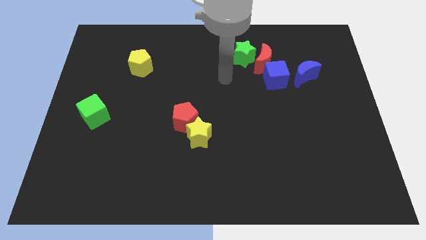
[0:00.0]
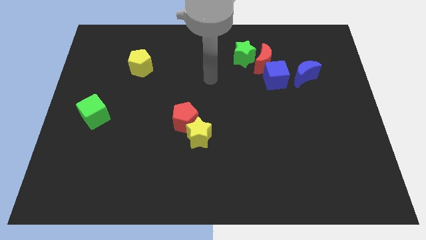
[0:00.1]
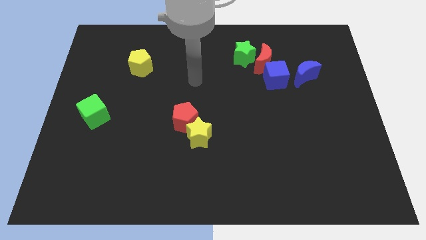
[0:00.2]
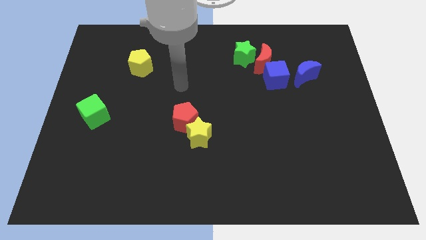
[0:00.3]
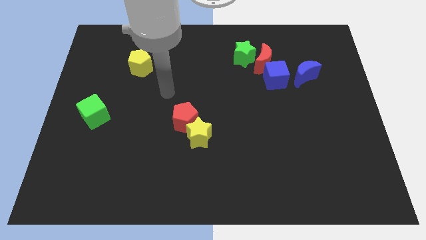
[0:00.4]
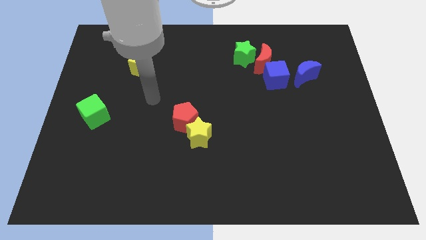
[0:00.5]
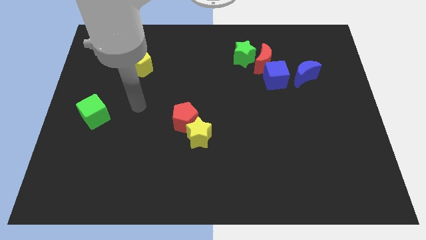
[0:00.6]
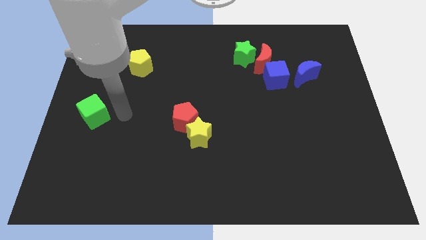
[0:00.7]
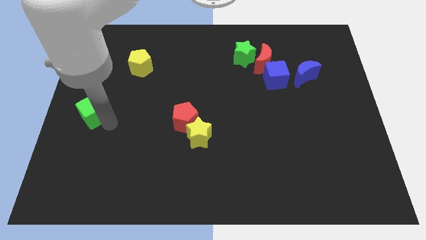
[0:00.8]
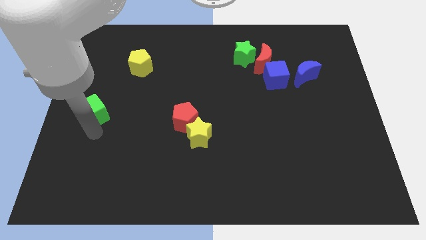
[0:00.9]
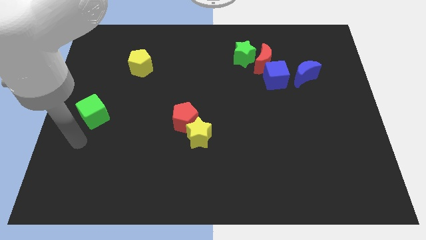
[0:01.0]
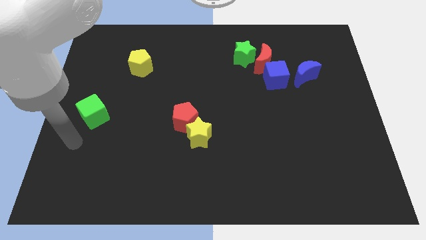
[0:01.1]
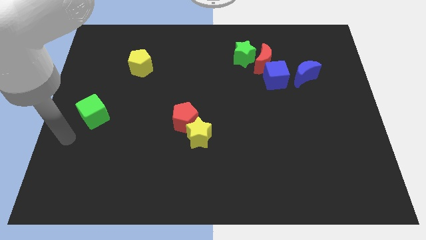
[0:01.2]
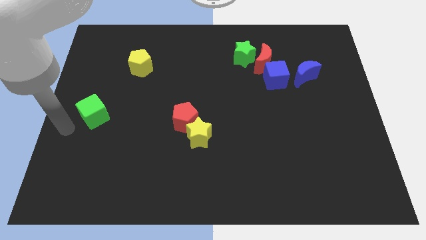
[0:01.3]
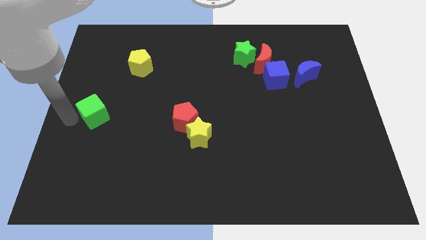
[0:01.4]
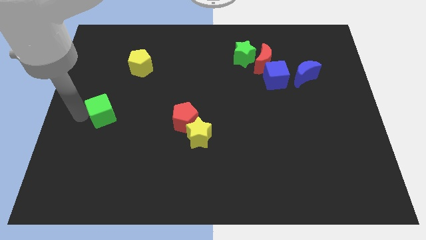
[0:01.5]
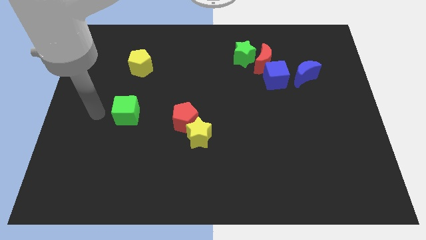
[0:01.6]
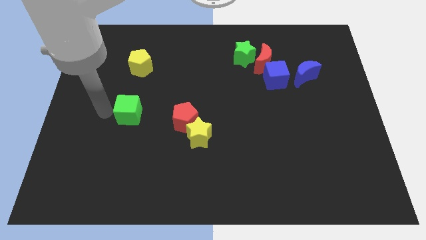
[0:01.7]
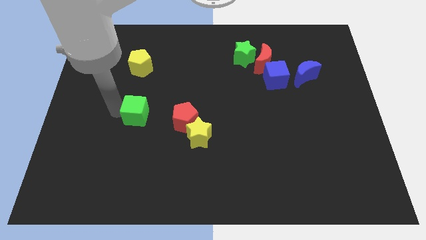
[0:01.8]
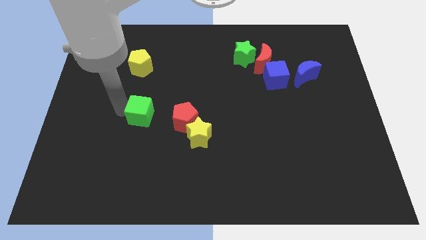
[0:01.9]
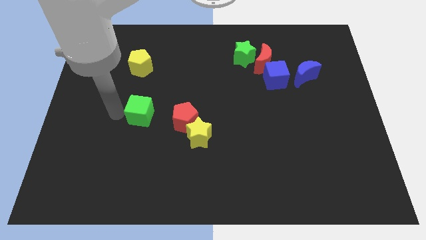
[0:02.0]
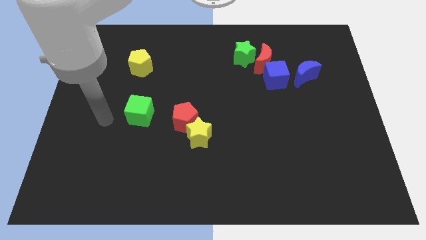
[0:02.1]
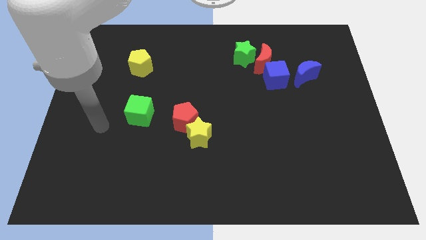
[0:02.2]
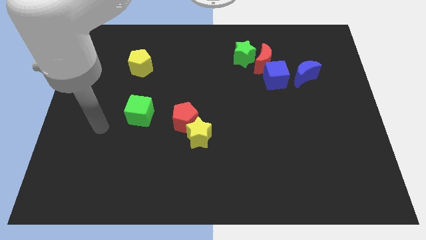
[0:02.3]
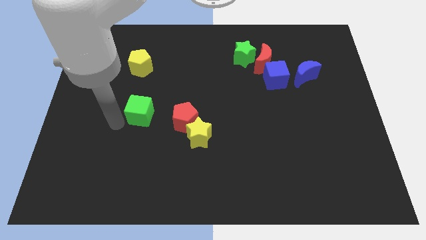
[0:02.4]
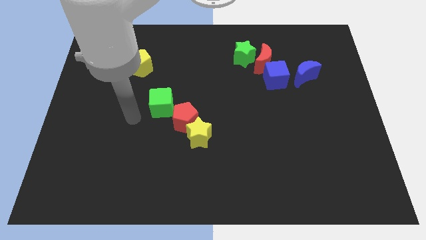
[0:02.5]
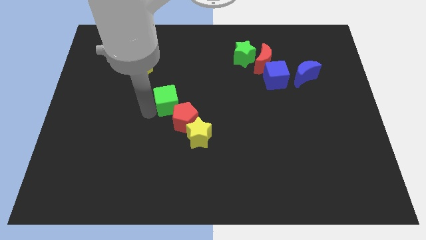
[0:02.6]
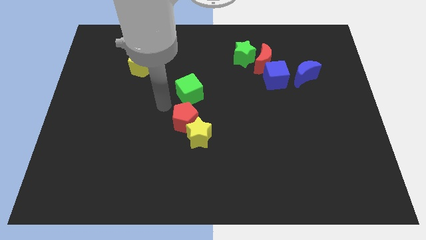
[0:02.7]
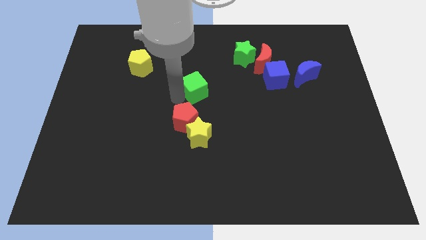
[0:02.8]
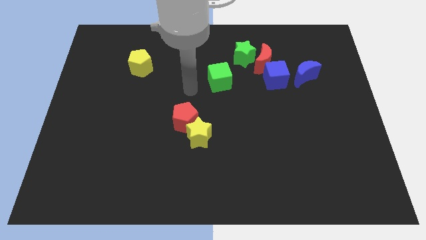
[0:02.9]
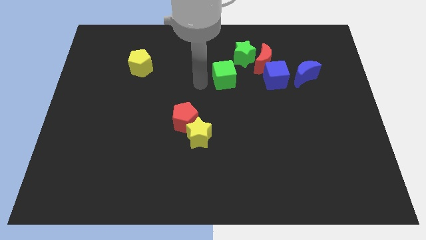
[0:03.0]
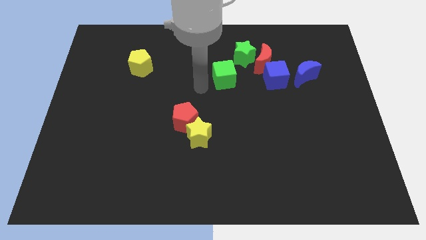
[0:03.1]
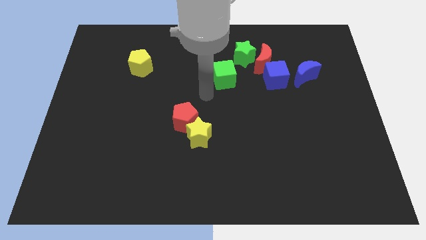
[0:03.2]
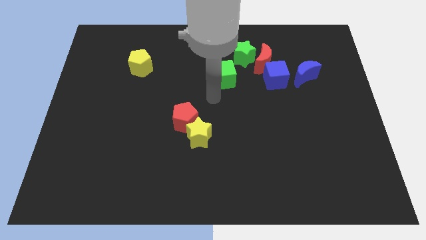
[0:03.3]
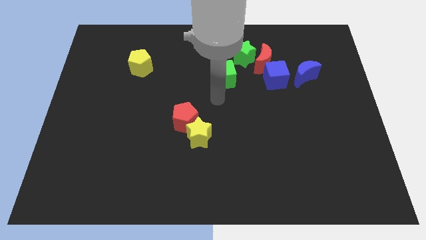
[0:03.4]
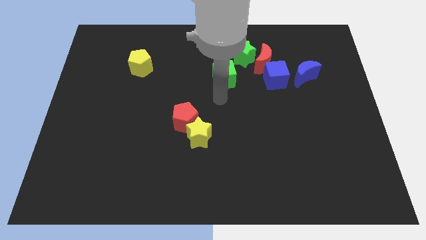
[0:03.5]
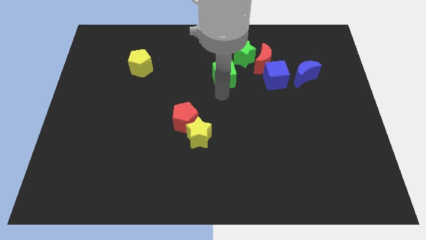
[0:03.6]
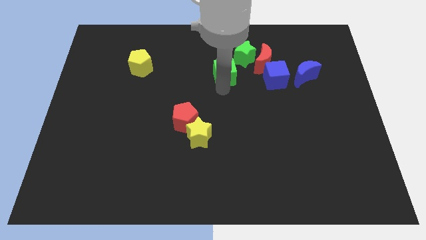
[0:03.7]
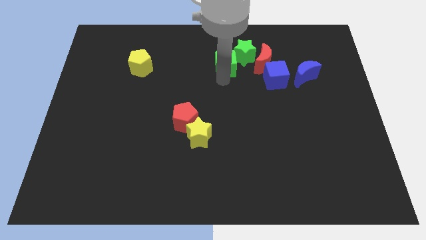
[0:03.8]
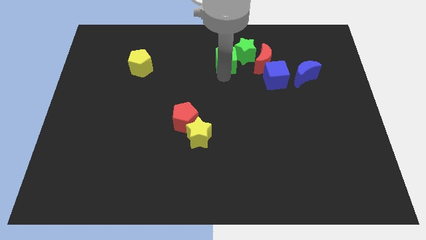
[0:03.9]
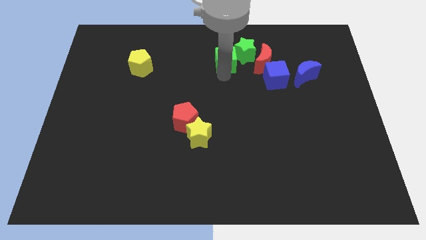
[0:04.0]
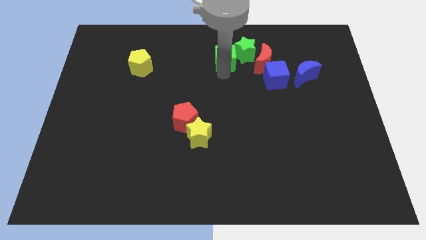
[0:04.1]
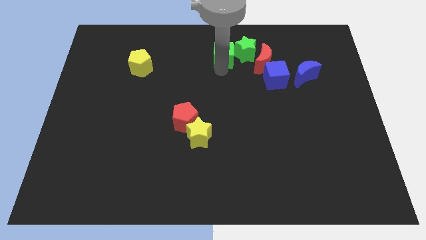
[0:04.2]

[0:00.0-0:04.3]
push the green cube into the green star

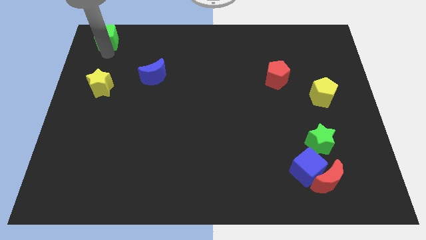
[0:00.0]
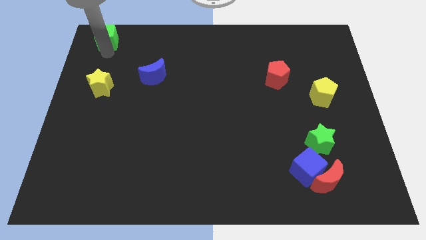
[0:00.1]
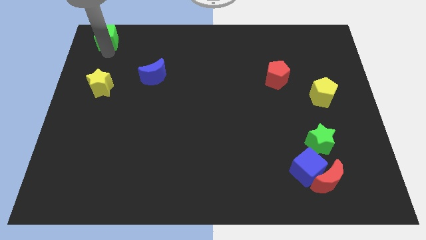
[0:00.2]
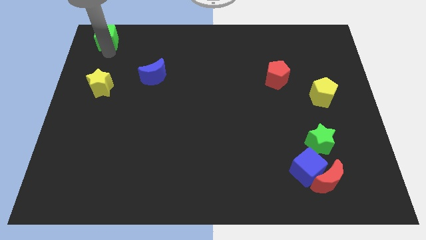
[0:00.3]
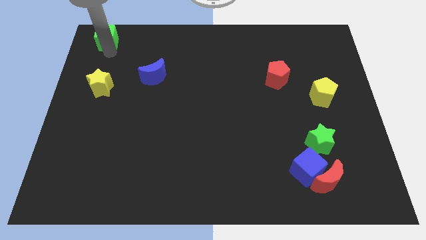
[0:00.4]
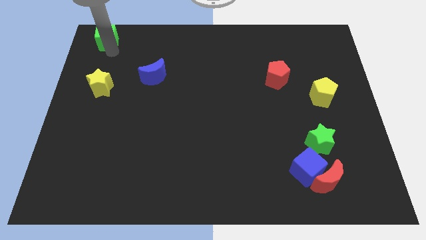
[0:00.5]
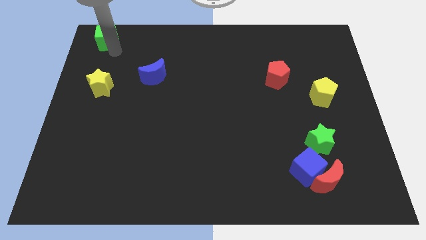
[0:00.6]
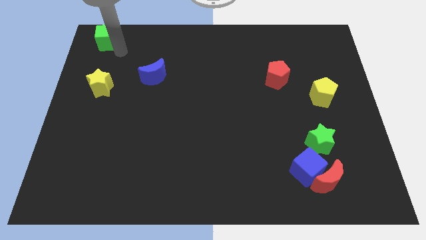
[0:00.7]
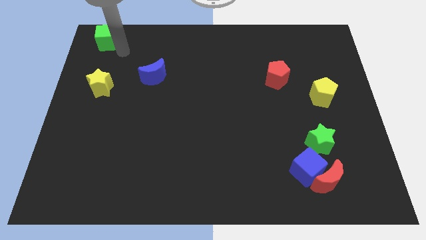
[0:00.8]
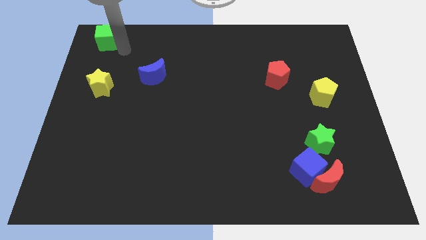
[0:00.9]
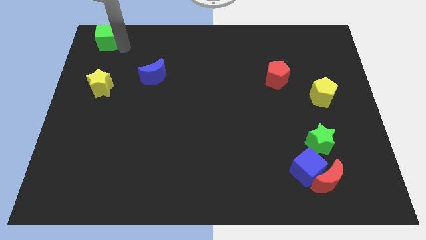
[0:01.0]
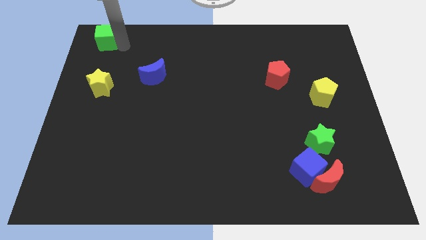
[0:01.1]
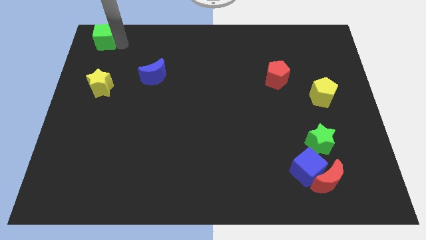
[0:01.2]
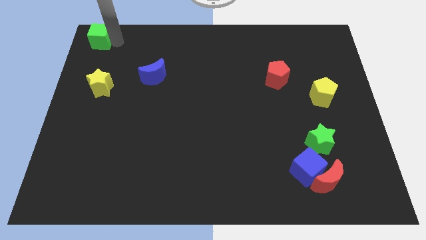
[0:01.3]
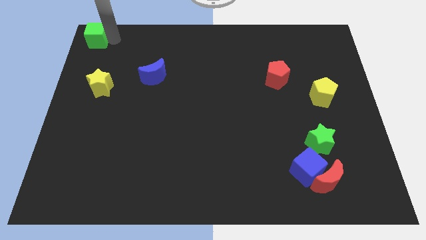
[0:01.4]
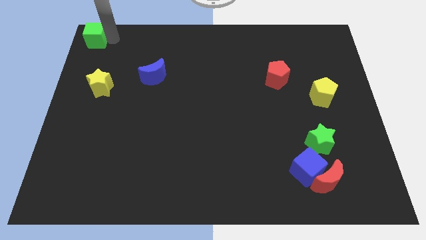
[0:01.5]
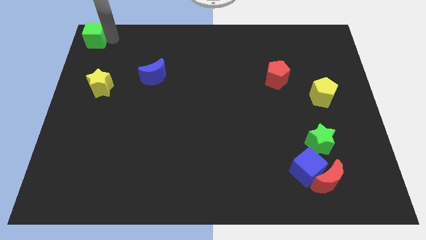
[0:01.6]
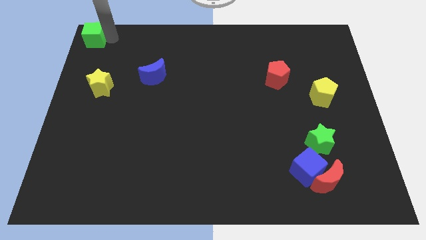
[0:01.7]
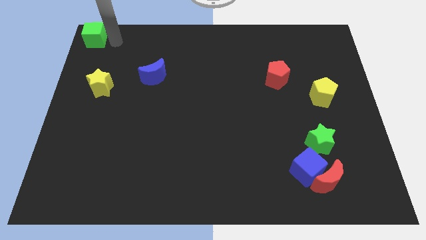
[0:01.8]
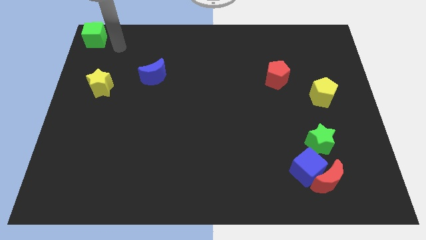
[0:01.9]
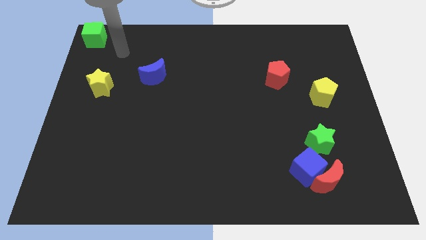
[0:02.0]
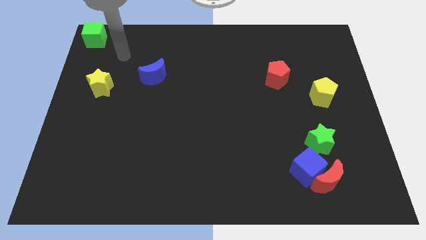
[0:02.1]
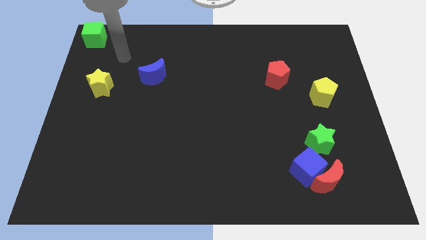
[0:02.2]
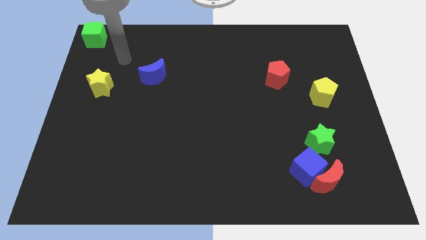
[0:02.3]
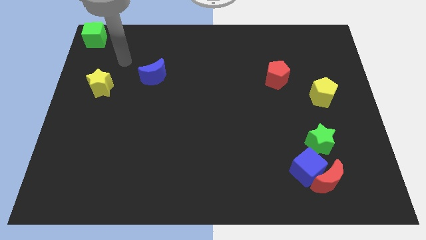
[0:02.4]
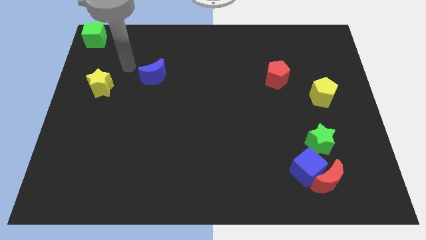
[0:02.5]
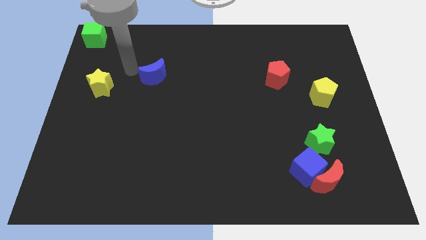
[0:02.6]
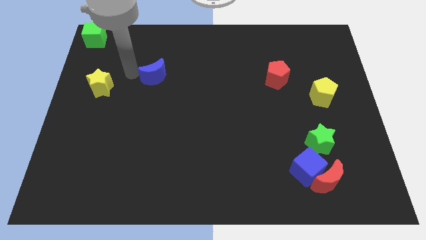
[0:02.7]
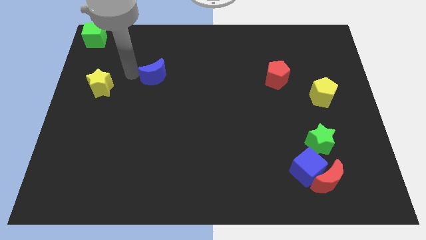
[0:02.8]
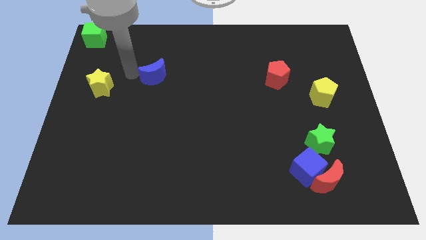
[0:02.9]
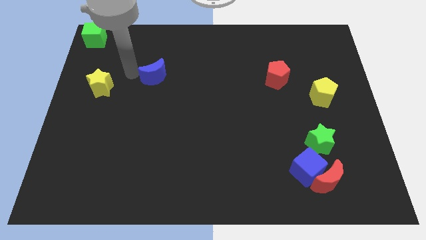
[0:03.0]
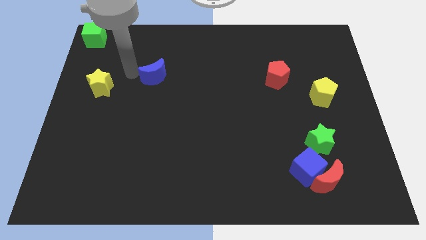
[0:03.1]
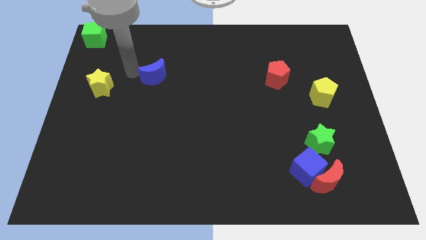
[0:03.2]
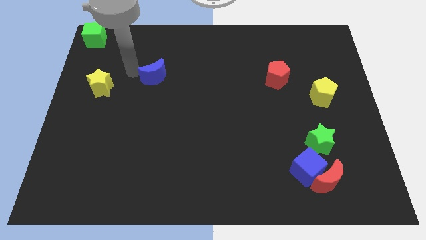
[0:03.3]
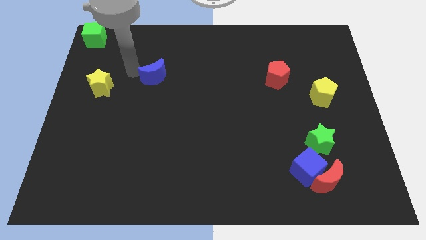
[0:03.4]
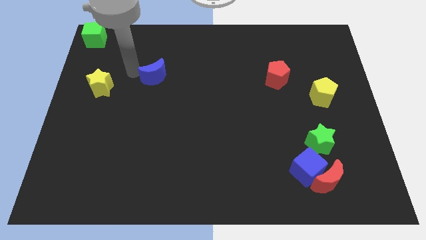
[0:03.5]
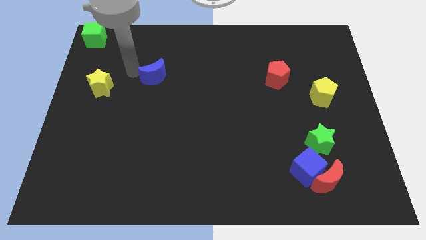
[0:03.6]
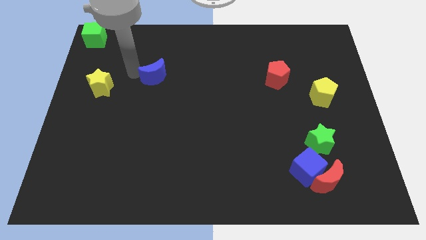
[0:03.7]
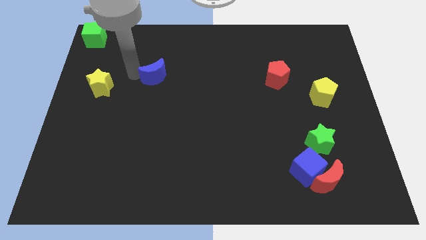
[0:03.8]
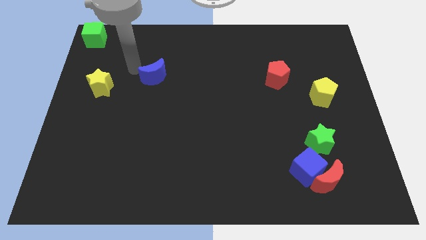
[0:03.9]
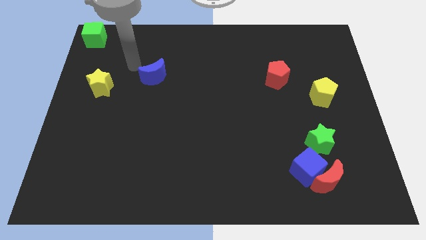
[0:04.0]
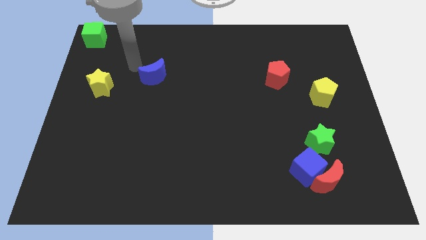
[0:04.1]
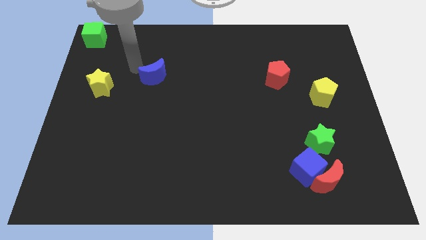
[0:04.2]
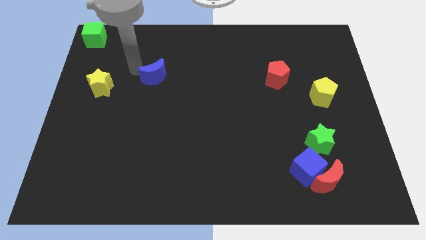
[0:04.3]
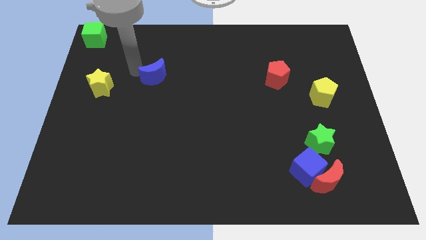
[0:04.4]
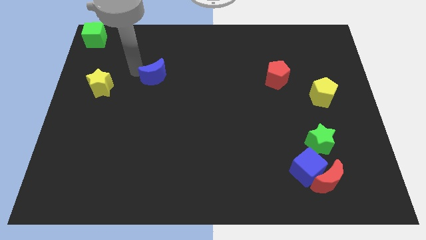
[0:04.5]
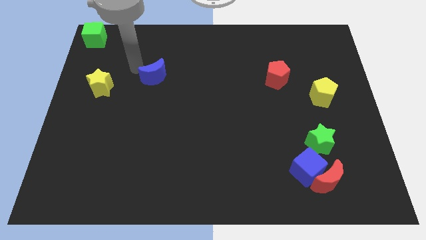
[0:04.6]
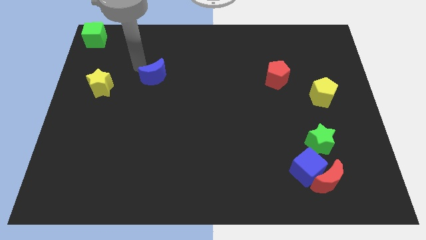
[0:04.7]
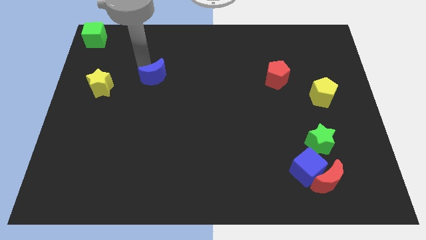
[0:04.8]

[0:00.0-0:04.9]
place the green cube at the top left corner
